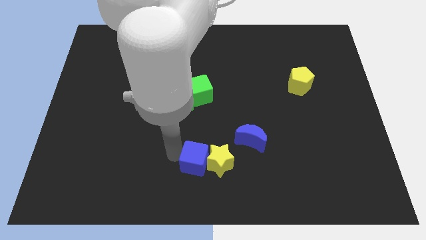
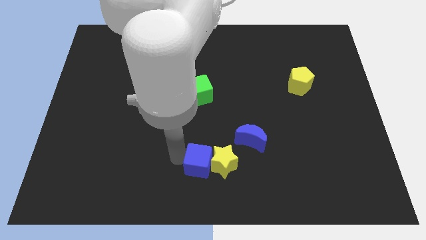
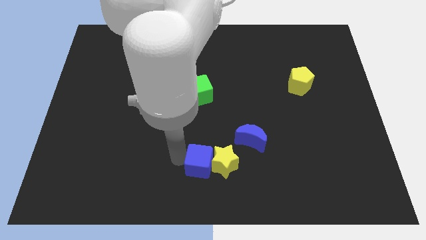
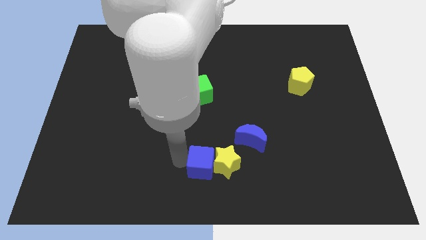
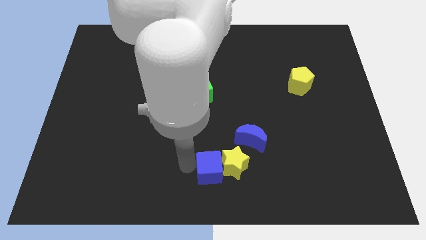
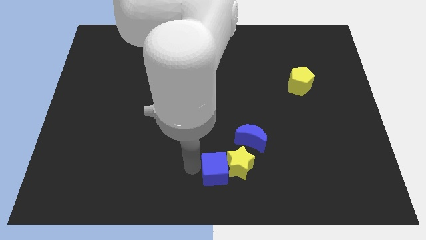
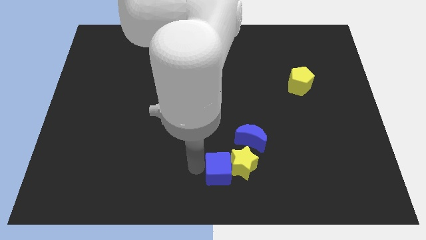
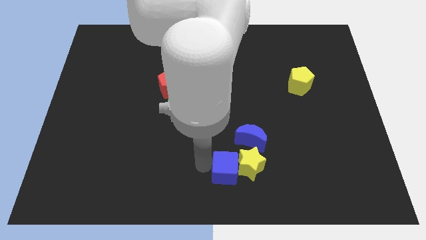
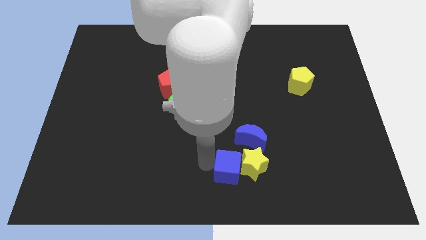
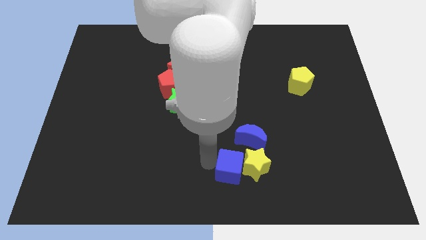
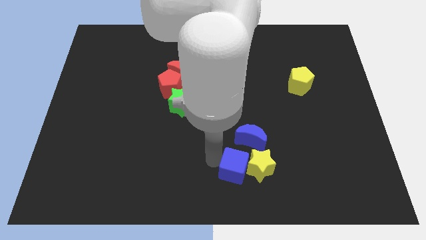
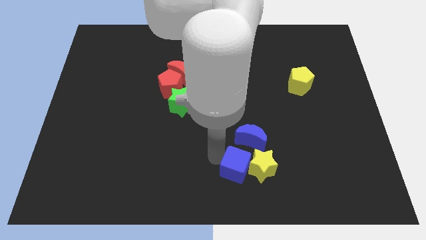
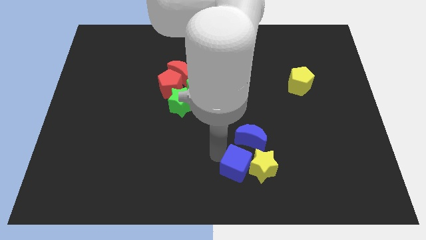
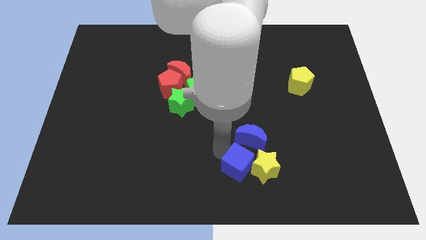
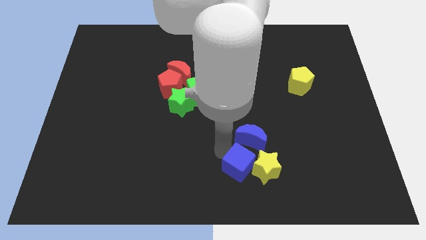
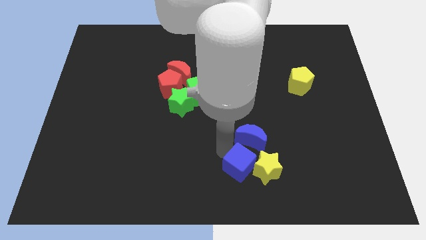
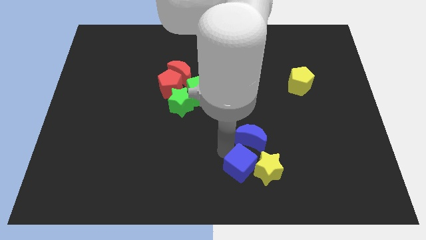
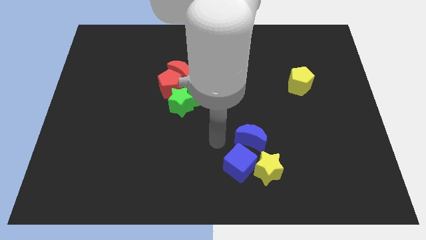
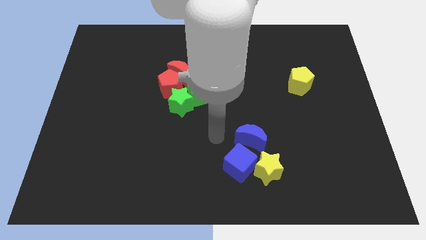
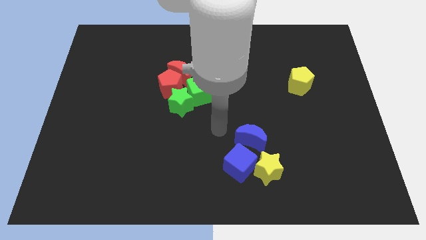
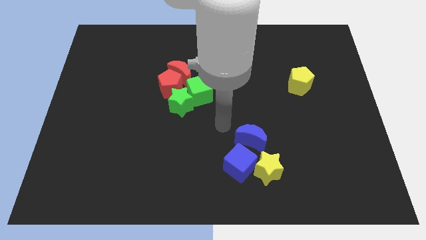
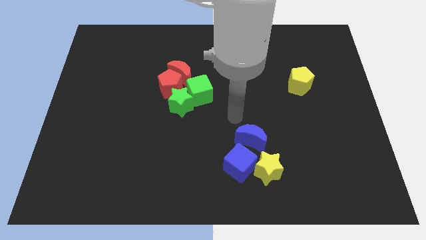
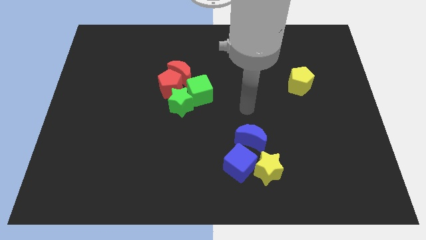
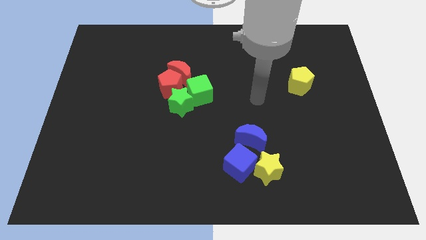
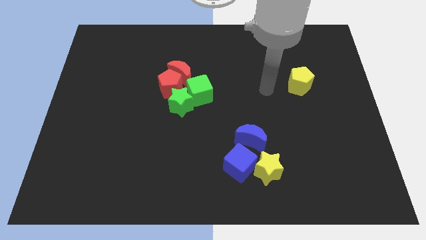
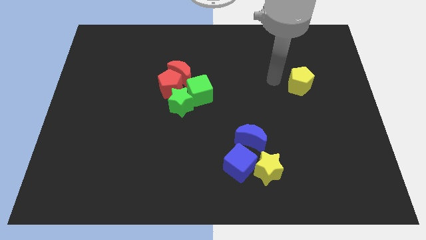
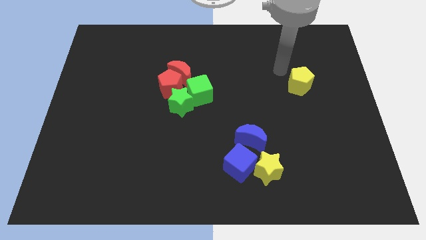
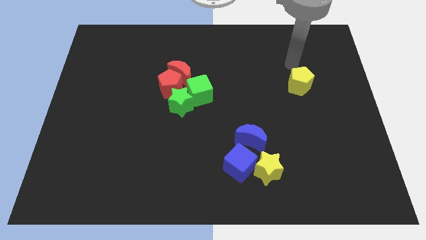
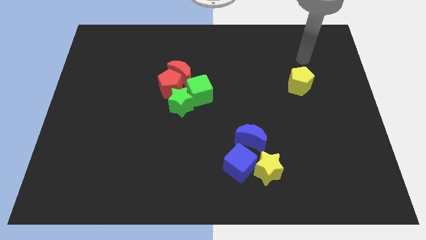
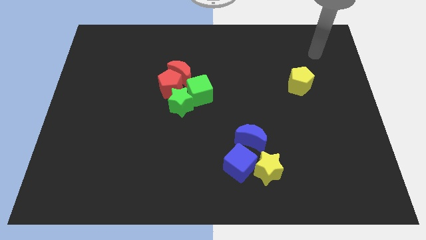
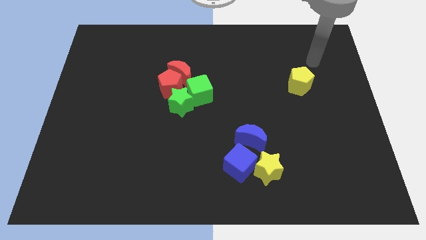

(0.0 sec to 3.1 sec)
move the blue cube along with the yellow star below the blue moon

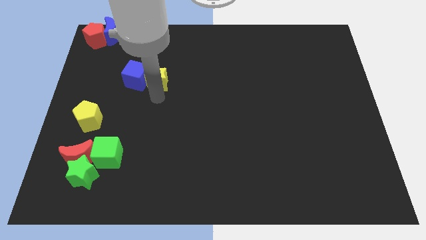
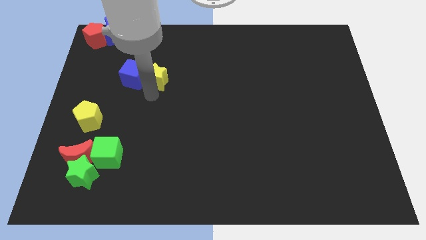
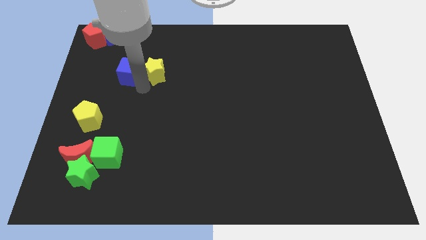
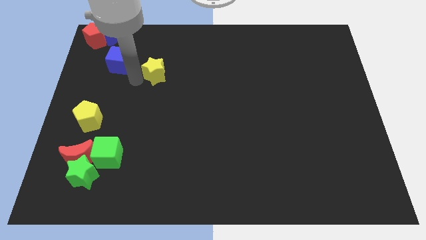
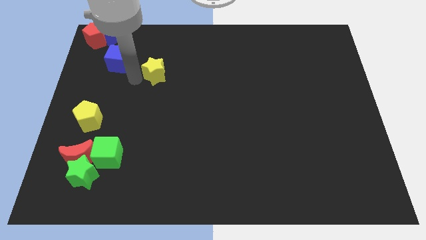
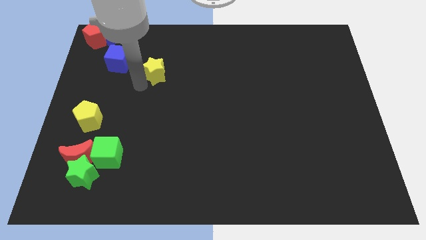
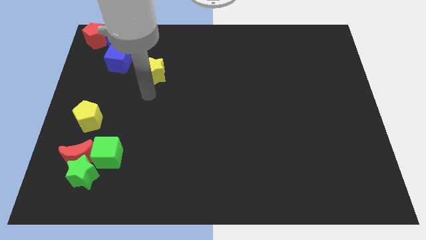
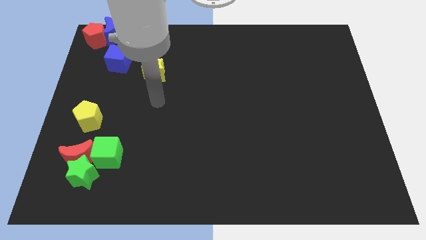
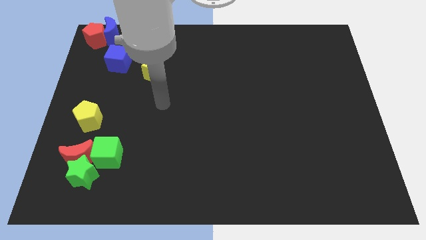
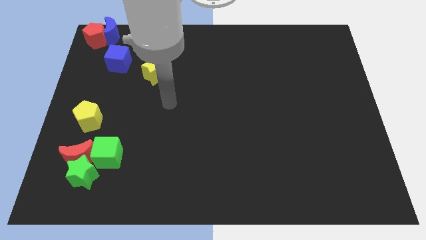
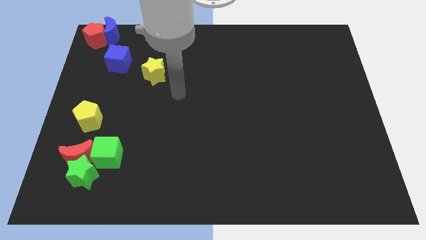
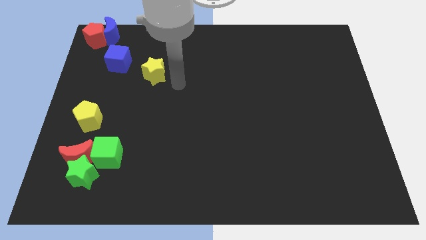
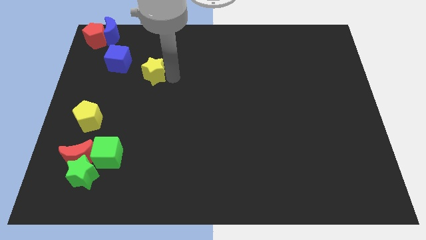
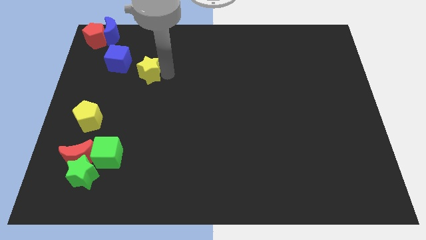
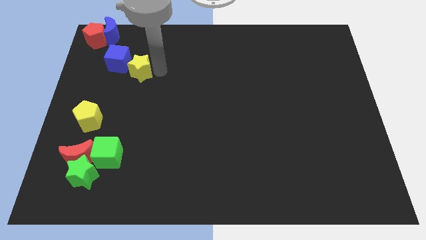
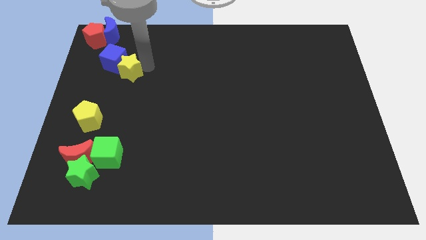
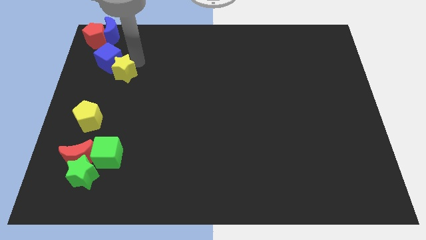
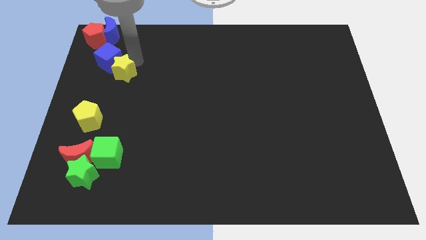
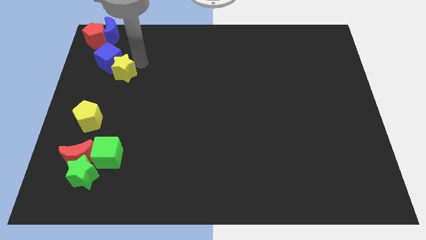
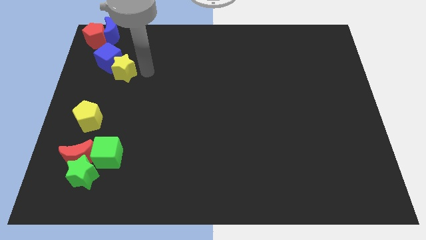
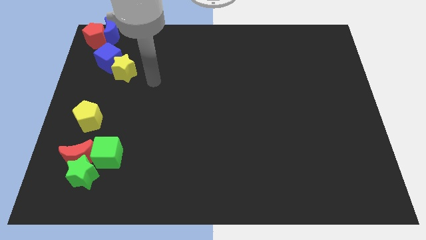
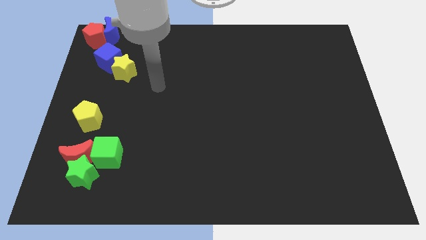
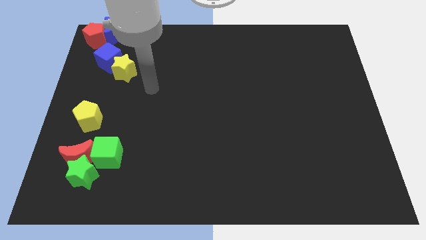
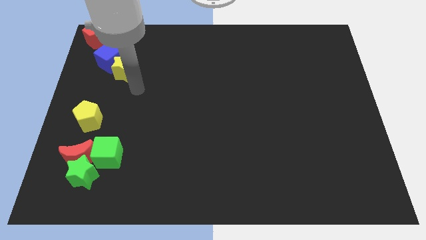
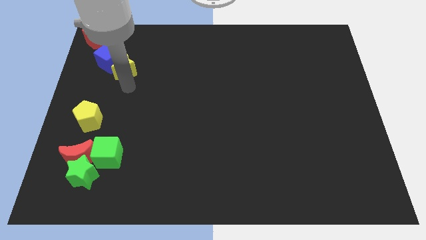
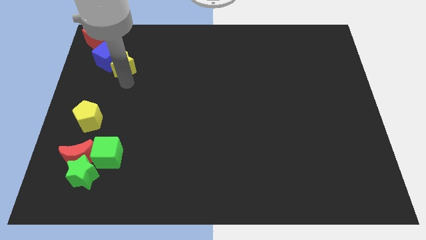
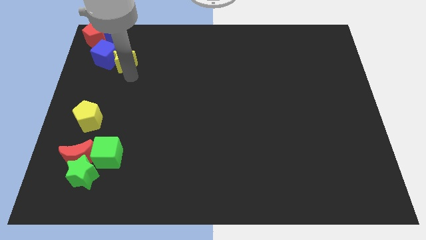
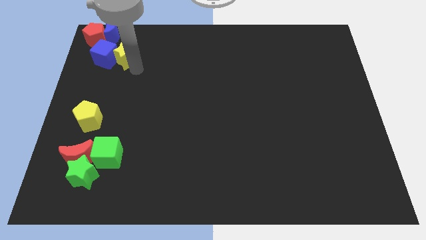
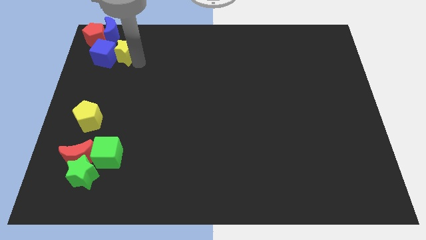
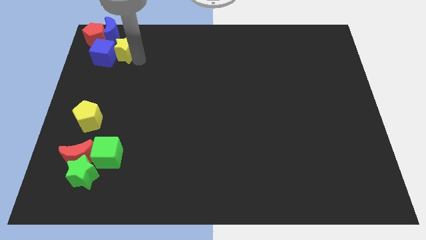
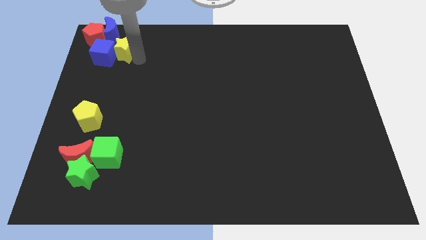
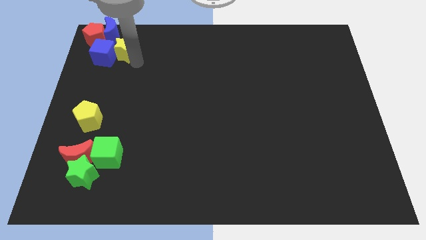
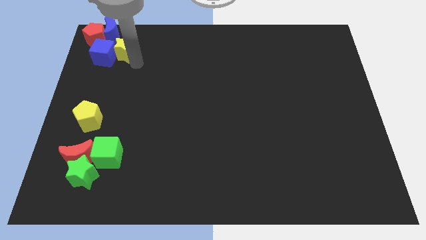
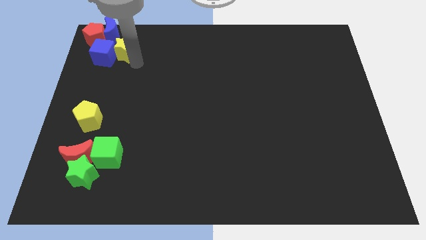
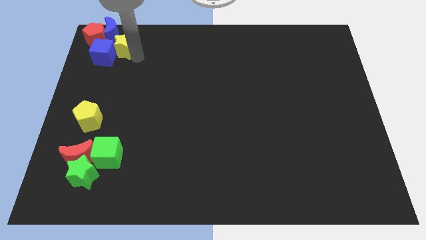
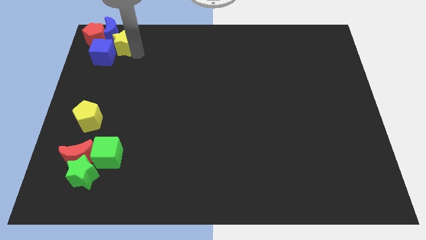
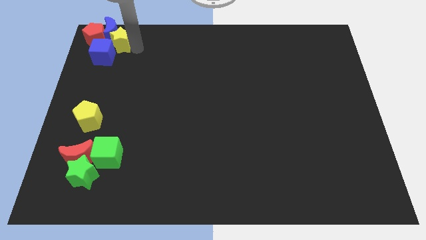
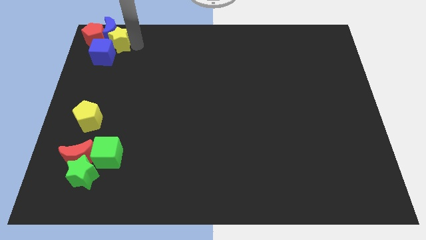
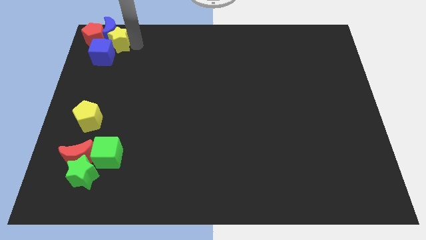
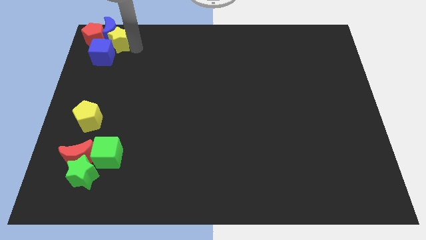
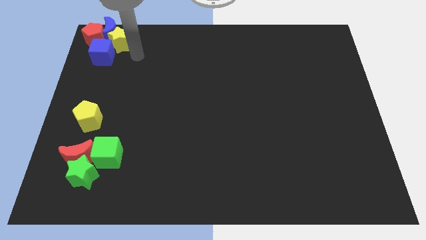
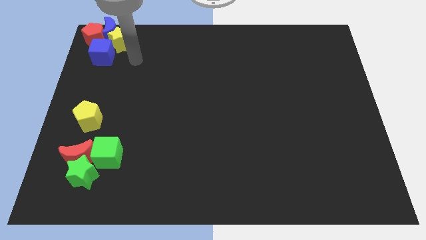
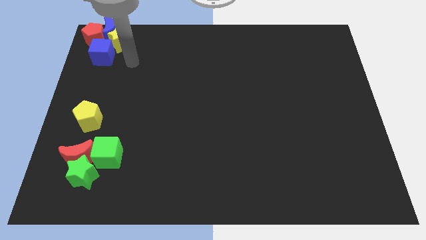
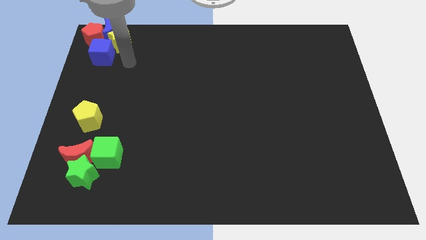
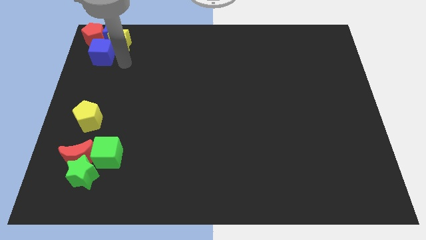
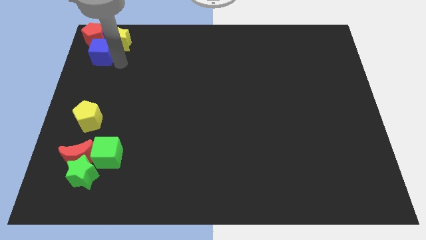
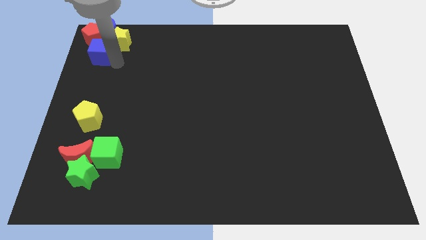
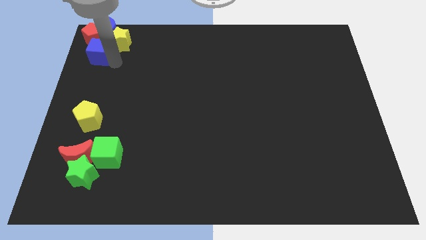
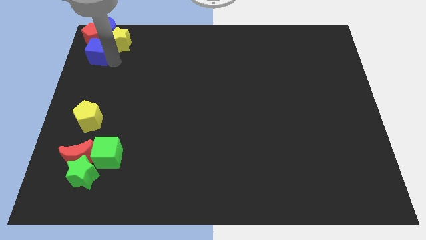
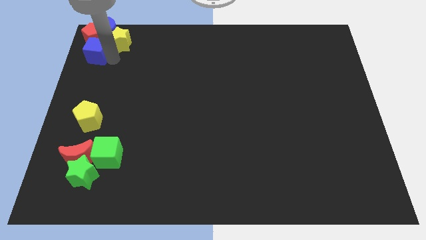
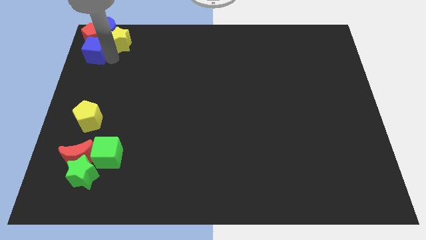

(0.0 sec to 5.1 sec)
arrange the yellow star and the blue cube at the top left of the board

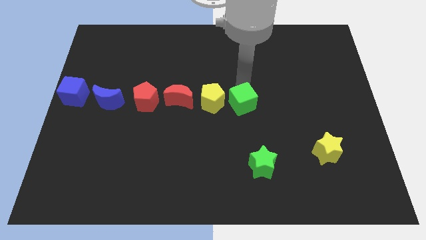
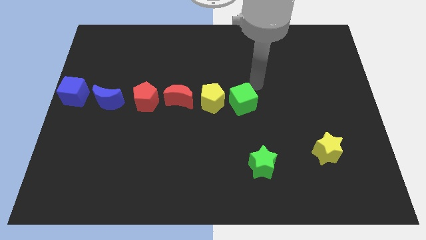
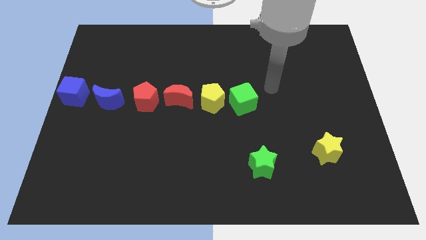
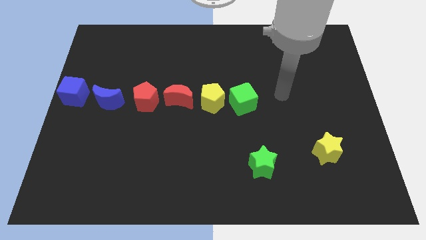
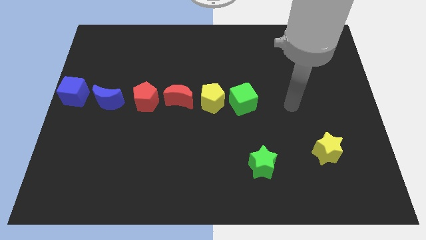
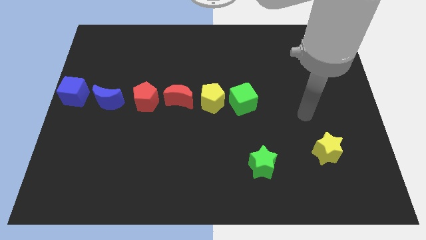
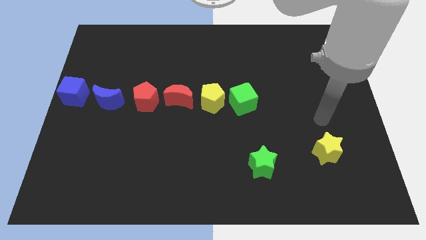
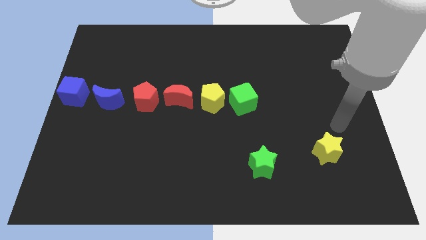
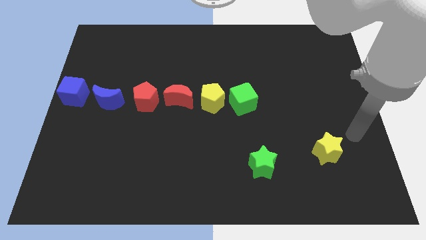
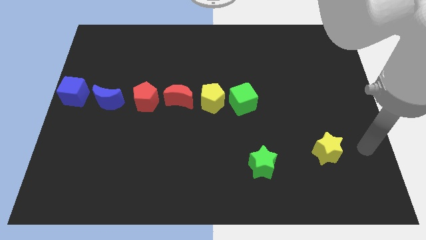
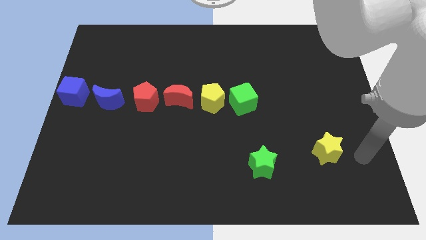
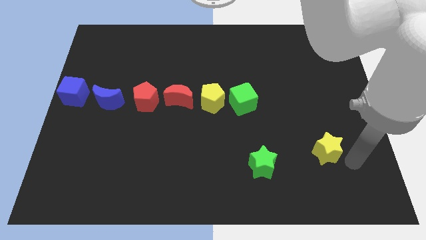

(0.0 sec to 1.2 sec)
move your arm away from the green cube
